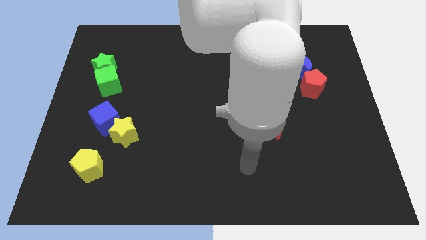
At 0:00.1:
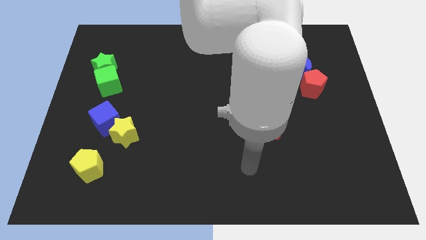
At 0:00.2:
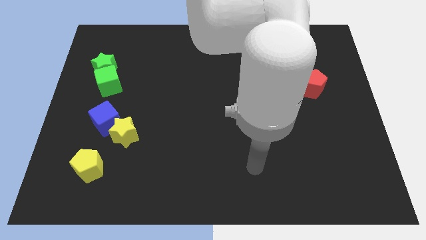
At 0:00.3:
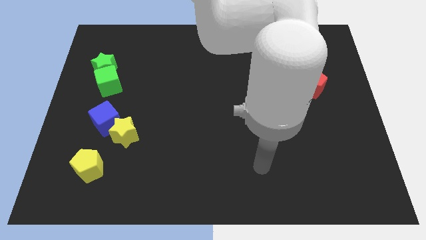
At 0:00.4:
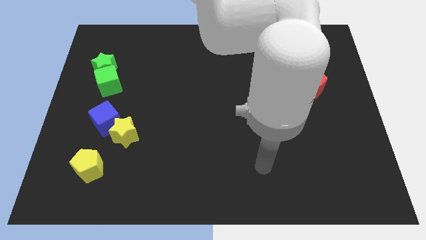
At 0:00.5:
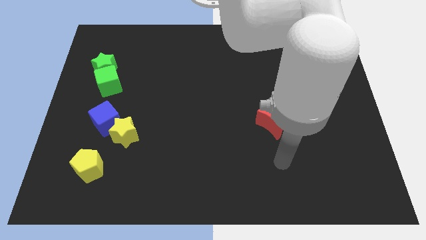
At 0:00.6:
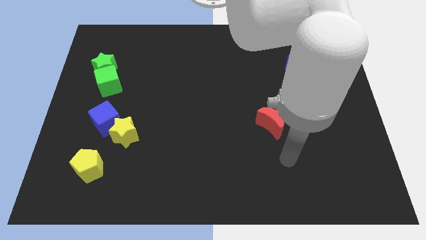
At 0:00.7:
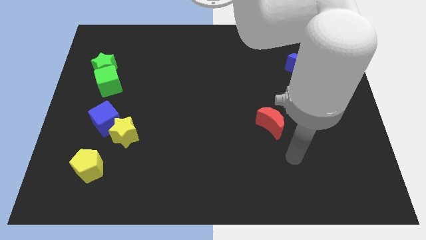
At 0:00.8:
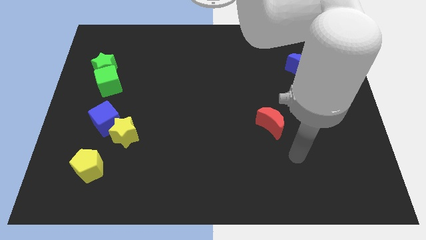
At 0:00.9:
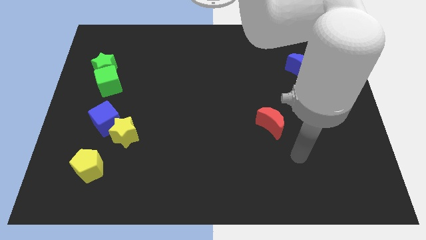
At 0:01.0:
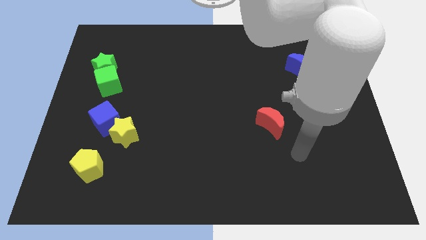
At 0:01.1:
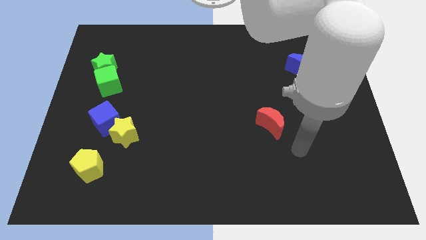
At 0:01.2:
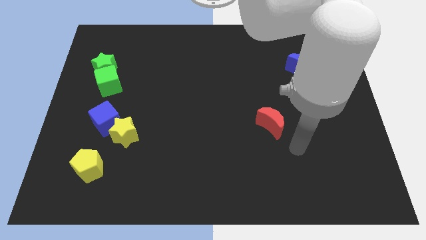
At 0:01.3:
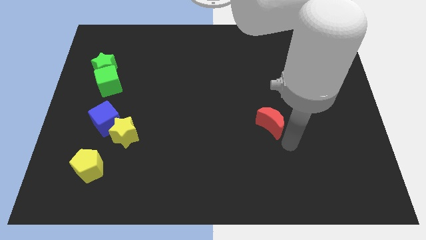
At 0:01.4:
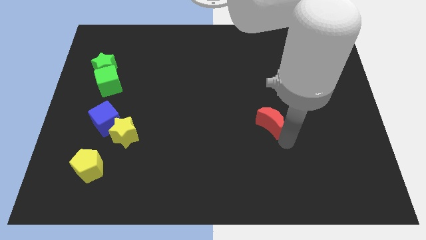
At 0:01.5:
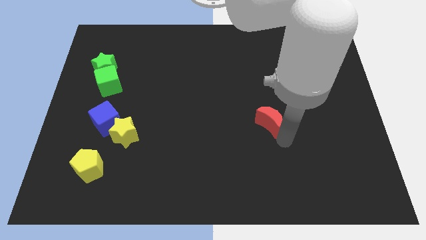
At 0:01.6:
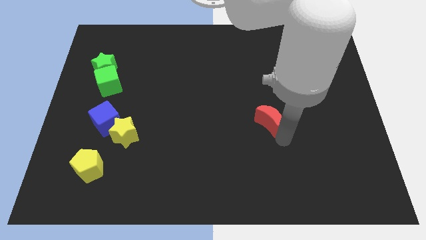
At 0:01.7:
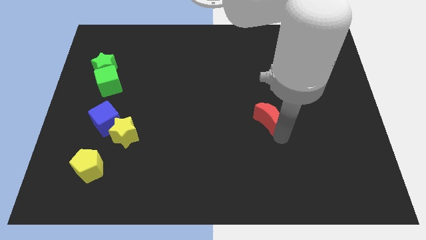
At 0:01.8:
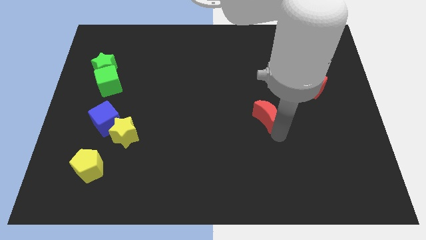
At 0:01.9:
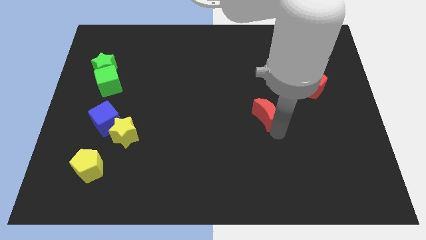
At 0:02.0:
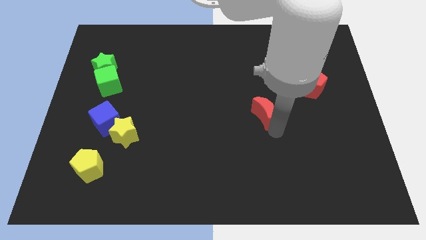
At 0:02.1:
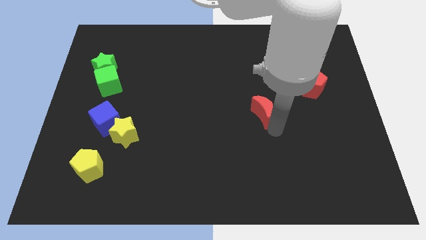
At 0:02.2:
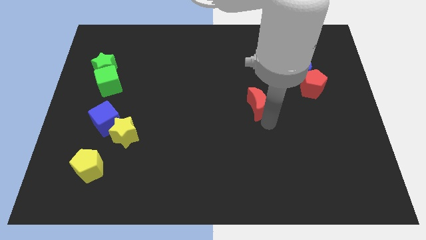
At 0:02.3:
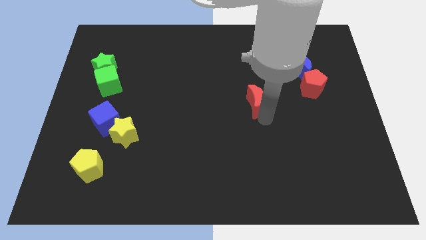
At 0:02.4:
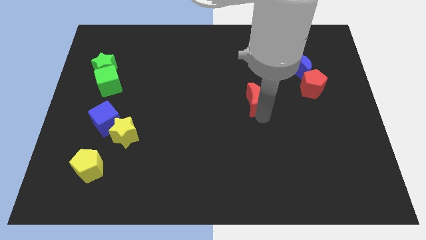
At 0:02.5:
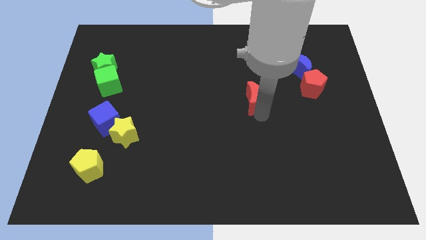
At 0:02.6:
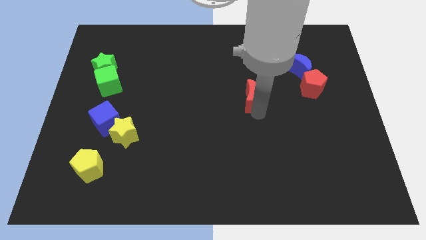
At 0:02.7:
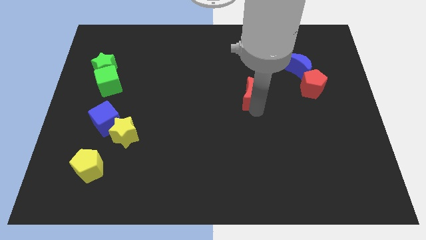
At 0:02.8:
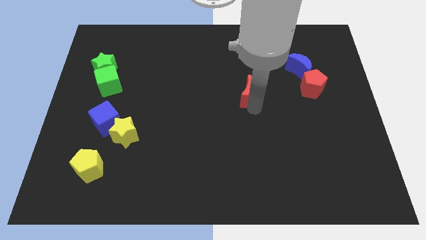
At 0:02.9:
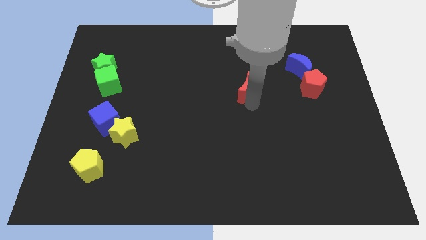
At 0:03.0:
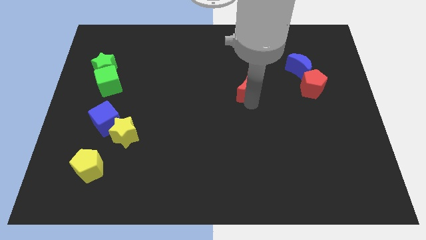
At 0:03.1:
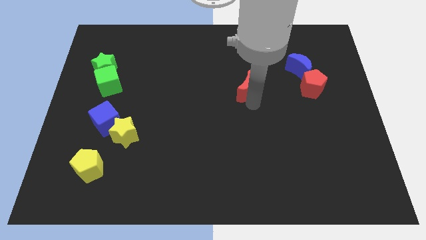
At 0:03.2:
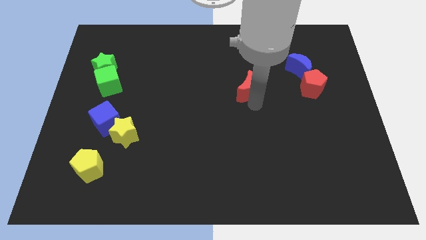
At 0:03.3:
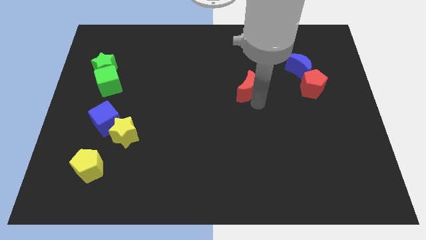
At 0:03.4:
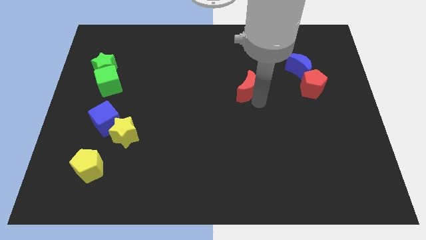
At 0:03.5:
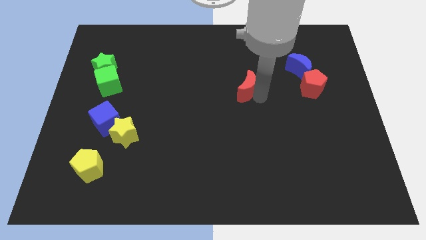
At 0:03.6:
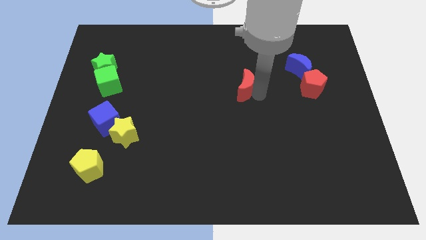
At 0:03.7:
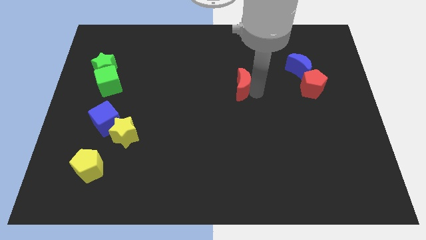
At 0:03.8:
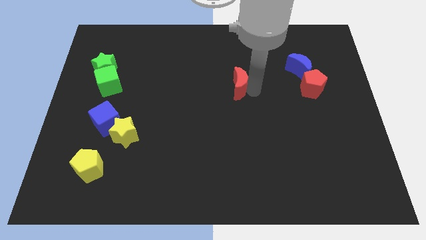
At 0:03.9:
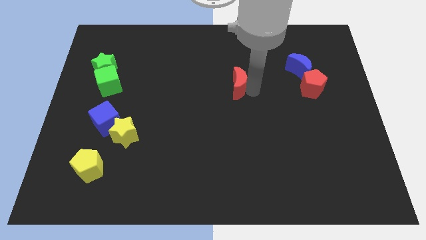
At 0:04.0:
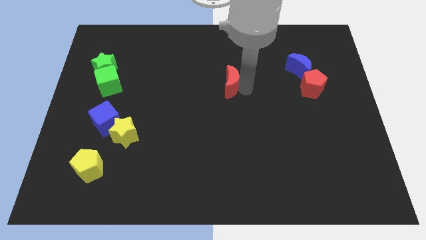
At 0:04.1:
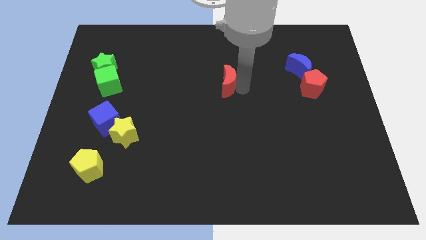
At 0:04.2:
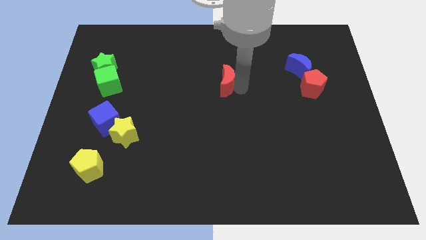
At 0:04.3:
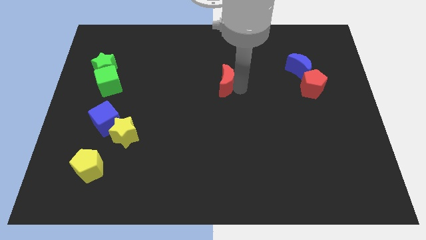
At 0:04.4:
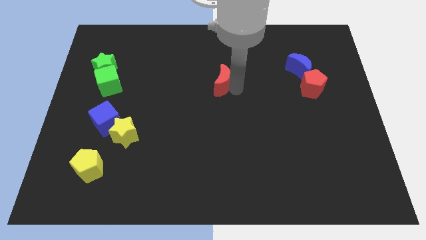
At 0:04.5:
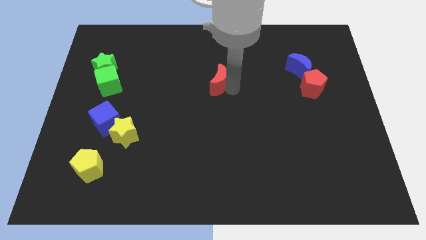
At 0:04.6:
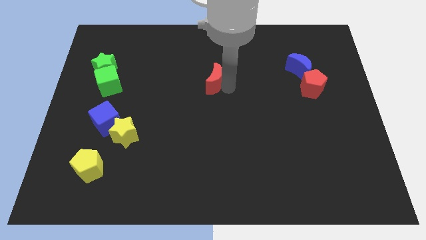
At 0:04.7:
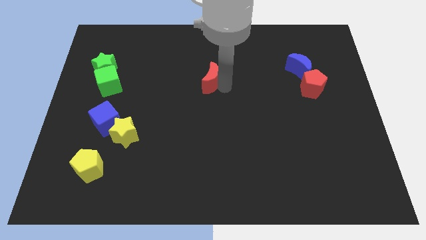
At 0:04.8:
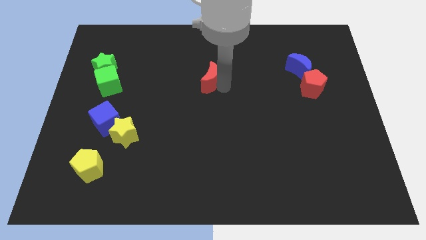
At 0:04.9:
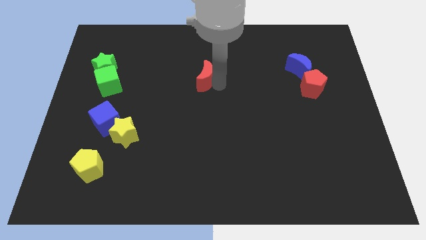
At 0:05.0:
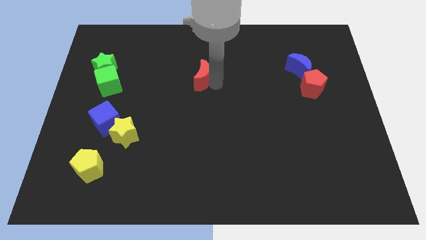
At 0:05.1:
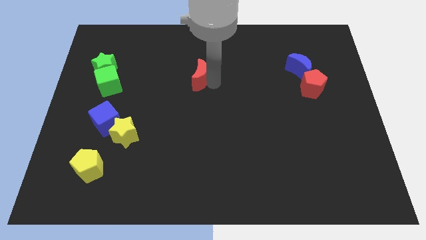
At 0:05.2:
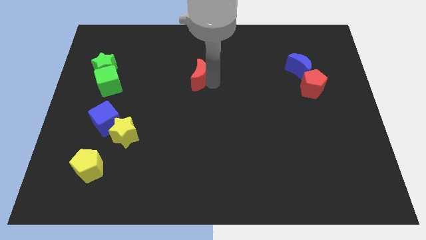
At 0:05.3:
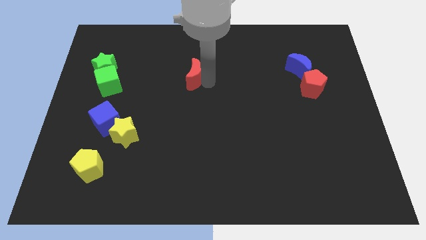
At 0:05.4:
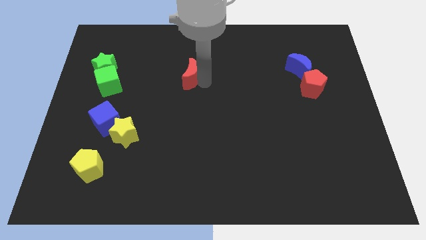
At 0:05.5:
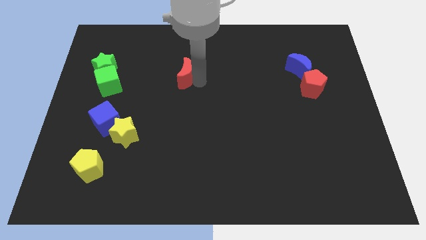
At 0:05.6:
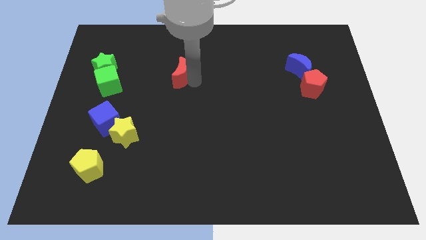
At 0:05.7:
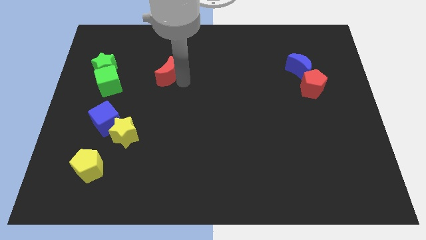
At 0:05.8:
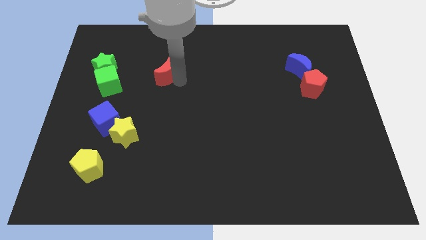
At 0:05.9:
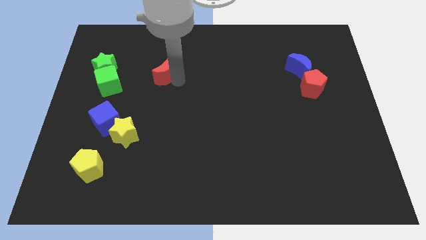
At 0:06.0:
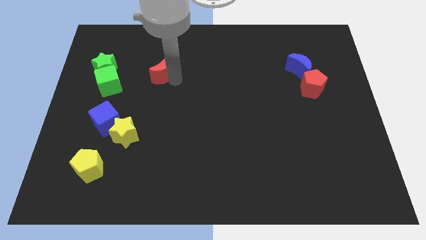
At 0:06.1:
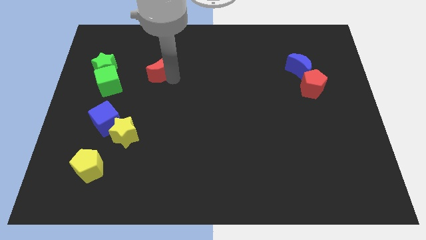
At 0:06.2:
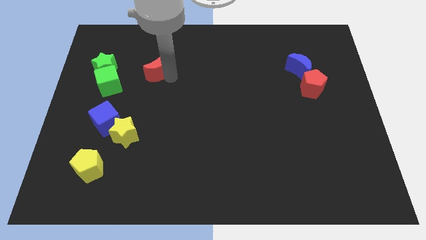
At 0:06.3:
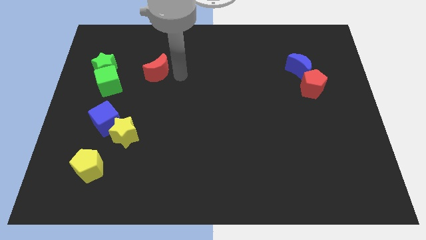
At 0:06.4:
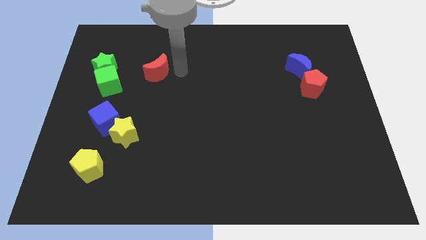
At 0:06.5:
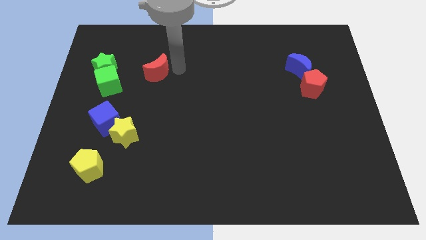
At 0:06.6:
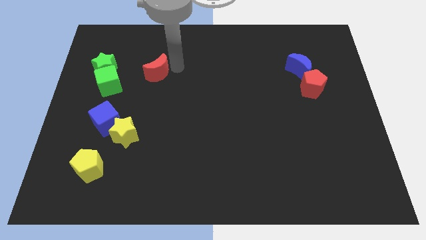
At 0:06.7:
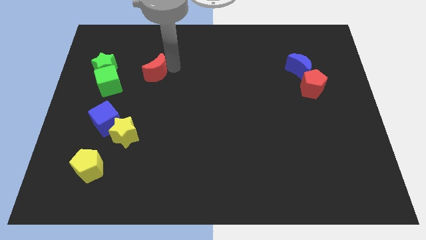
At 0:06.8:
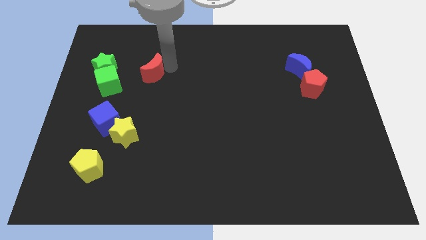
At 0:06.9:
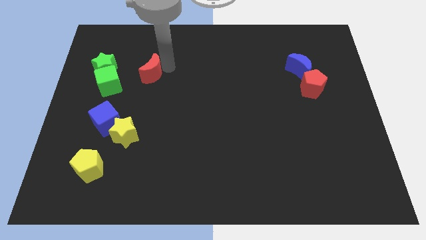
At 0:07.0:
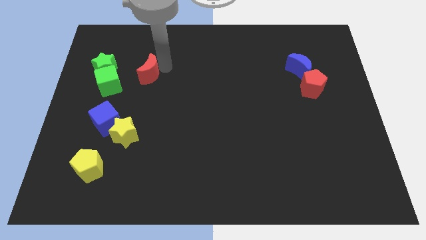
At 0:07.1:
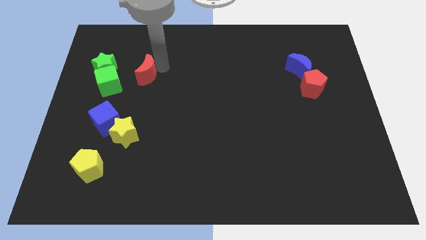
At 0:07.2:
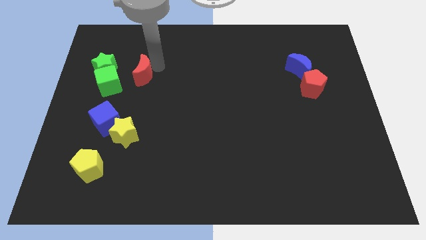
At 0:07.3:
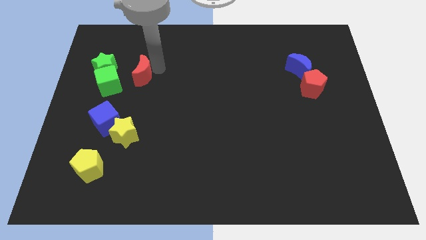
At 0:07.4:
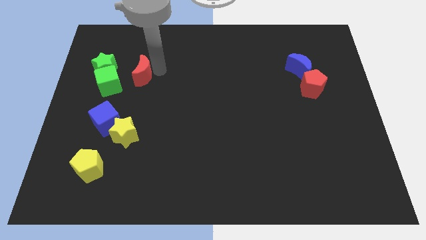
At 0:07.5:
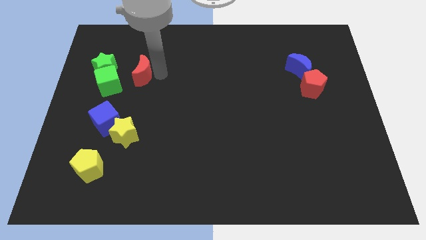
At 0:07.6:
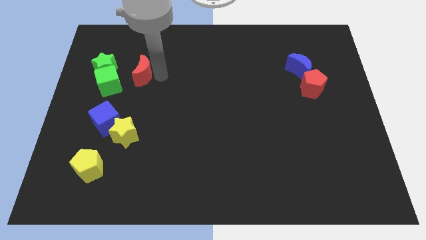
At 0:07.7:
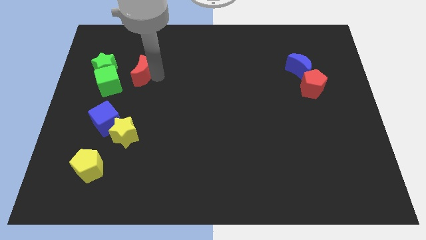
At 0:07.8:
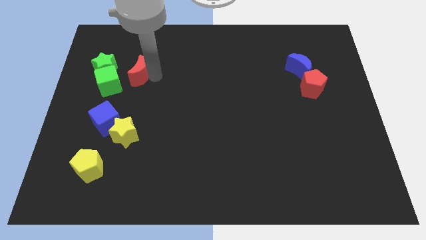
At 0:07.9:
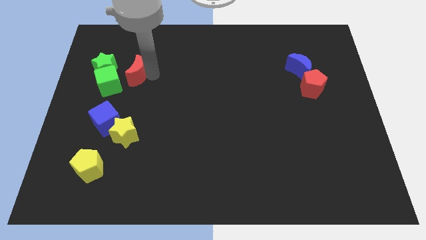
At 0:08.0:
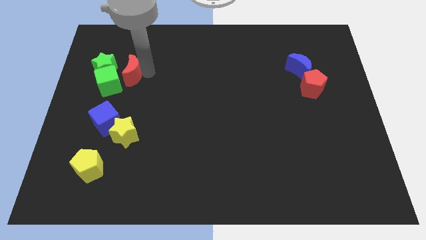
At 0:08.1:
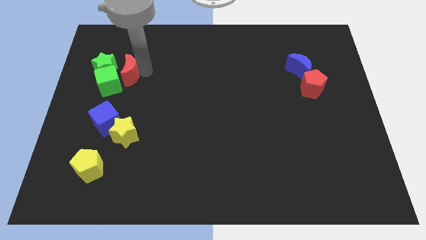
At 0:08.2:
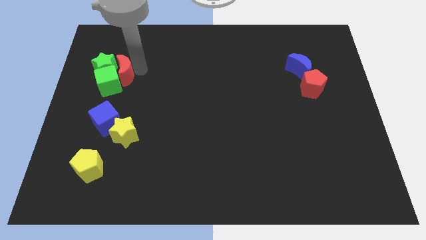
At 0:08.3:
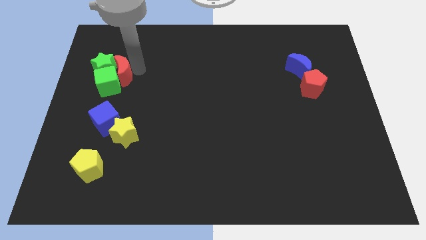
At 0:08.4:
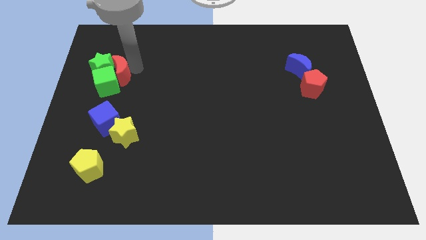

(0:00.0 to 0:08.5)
put the red moon towards the green star
